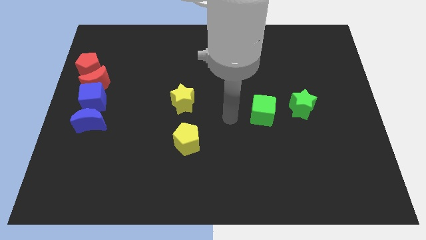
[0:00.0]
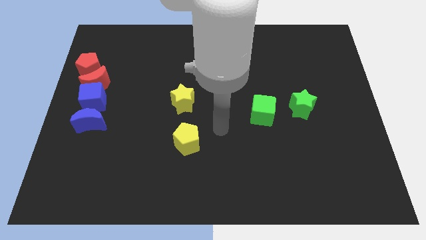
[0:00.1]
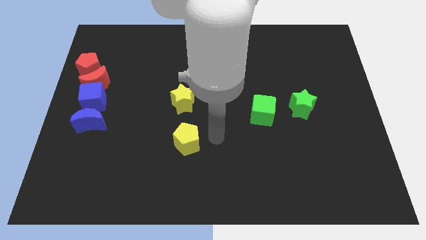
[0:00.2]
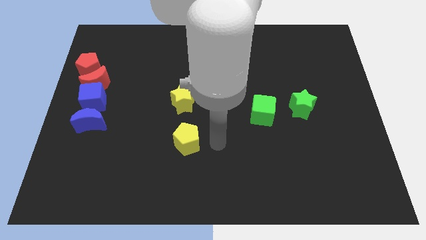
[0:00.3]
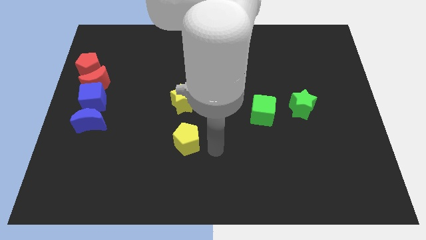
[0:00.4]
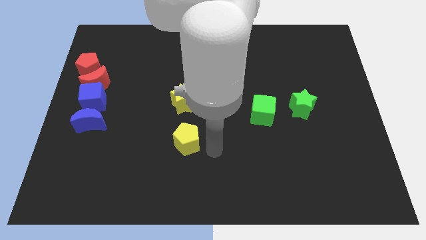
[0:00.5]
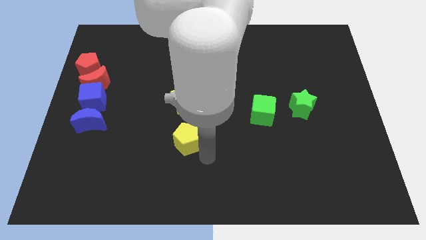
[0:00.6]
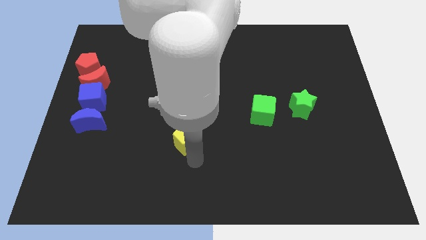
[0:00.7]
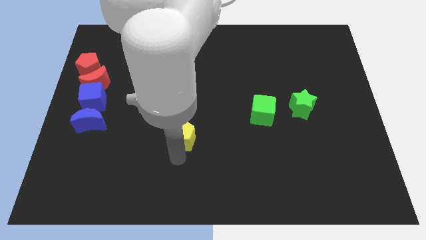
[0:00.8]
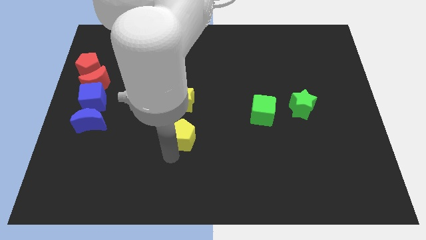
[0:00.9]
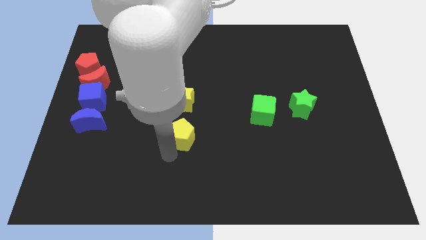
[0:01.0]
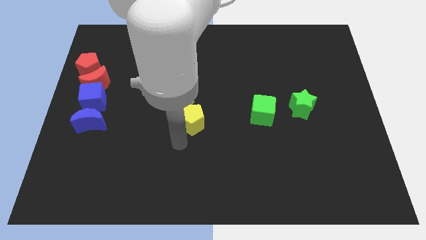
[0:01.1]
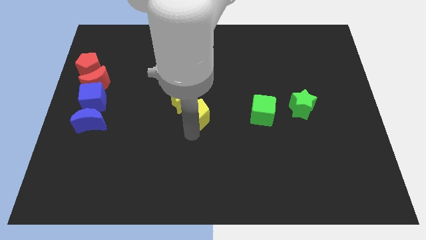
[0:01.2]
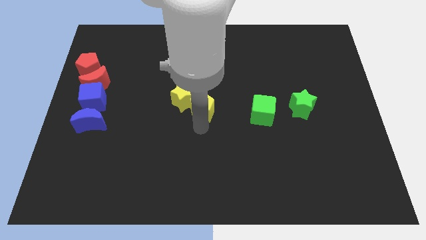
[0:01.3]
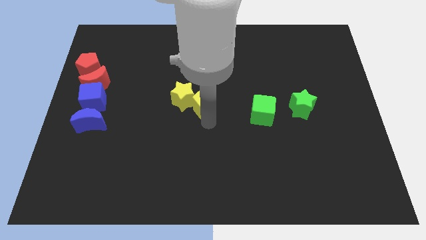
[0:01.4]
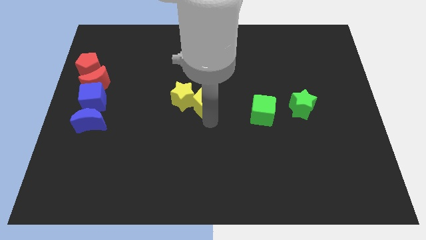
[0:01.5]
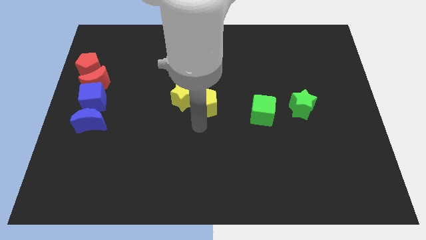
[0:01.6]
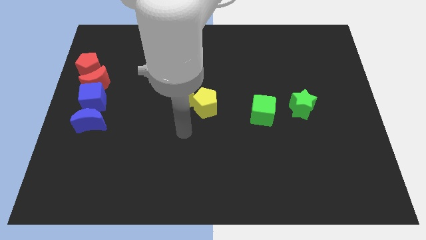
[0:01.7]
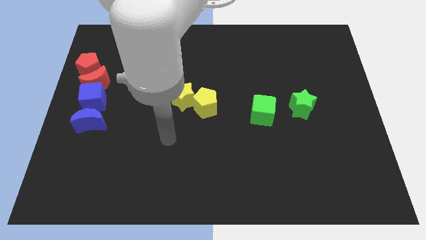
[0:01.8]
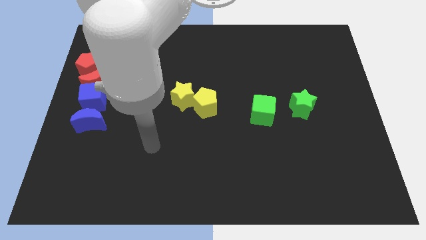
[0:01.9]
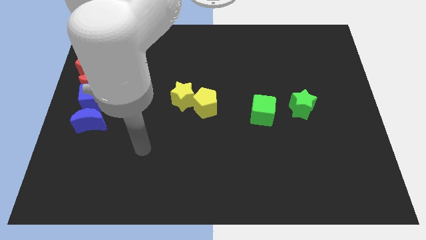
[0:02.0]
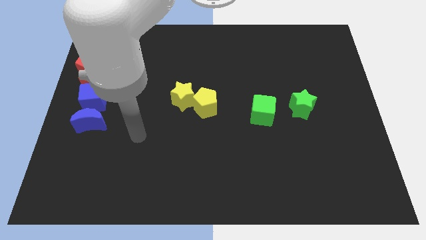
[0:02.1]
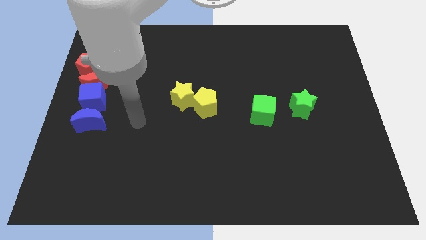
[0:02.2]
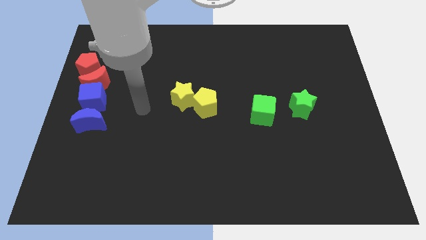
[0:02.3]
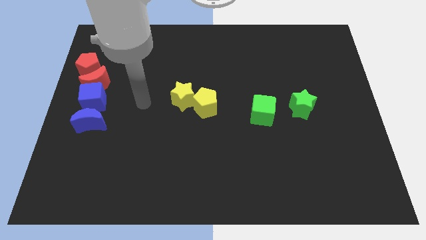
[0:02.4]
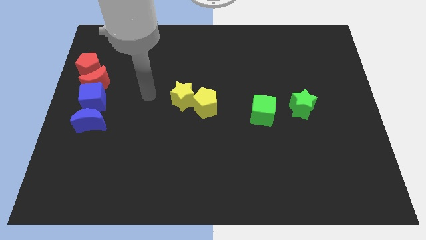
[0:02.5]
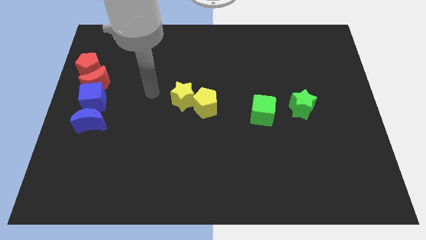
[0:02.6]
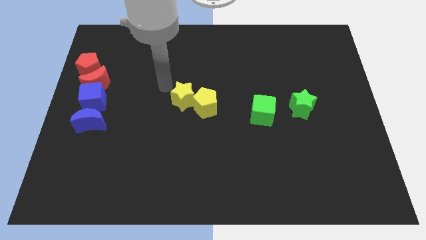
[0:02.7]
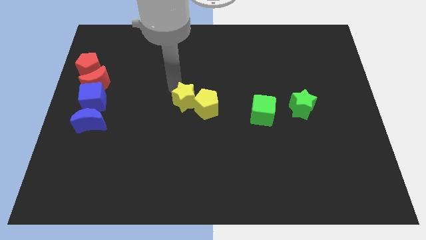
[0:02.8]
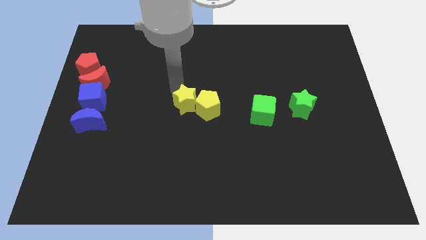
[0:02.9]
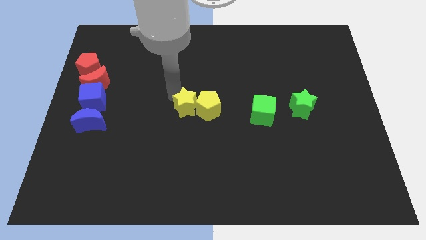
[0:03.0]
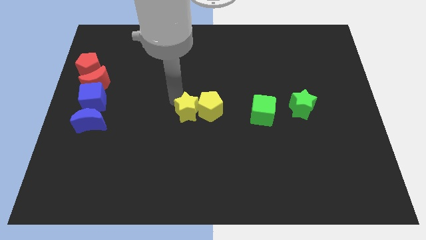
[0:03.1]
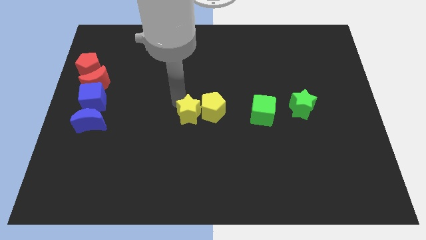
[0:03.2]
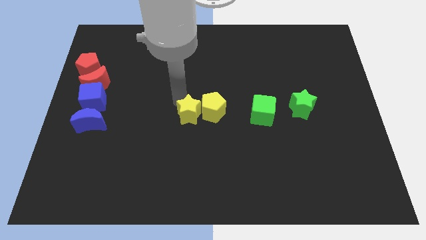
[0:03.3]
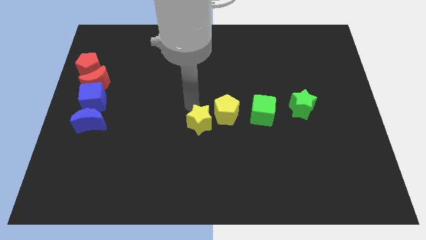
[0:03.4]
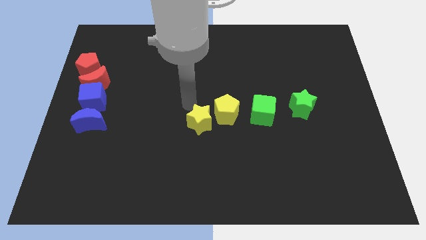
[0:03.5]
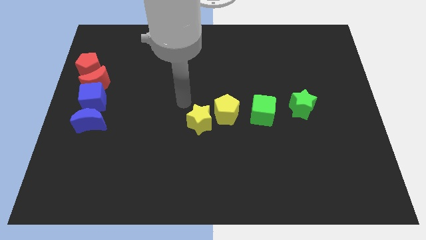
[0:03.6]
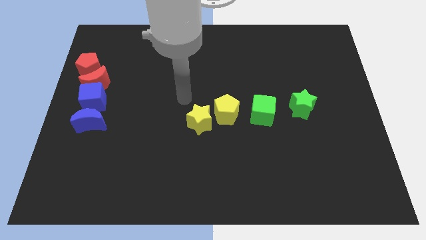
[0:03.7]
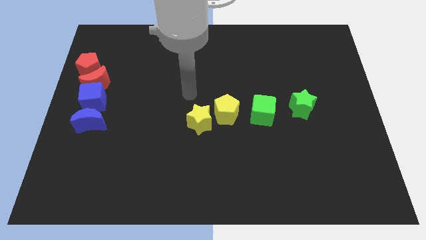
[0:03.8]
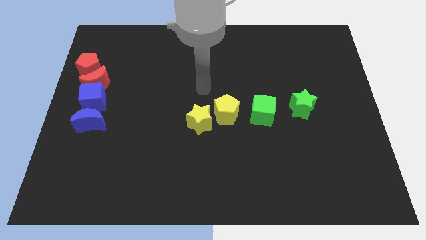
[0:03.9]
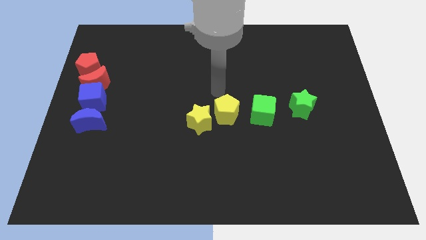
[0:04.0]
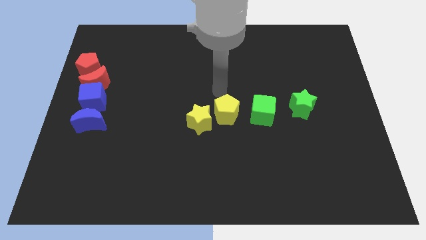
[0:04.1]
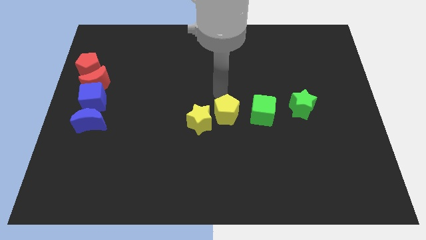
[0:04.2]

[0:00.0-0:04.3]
move the yellow blocks towards the left side of the green cube

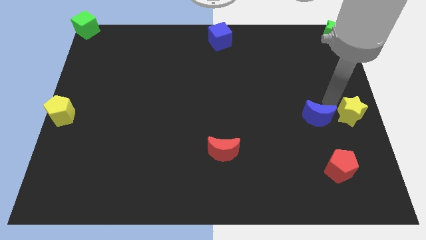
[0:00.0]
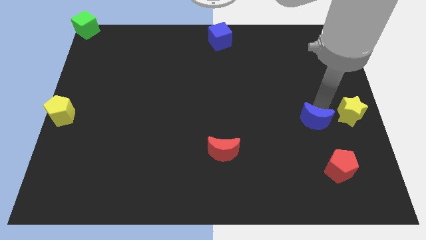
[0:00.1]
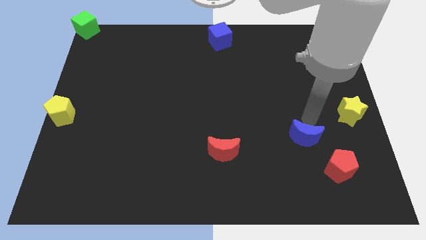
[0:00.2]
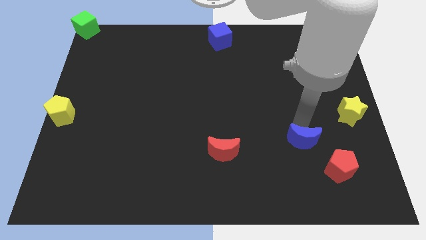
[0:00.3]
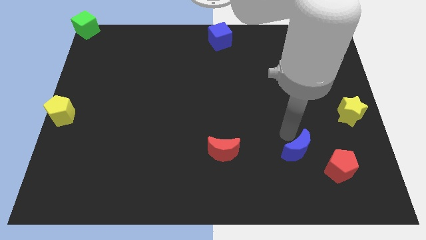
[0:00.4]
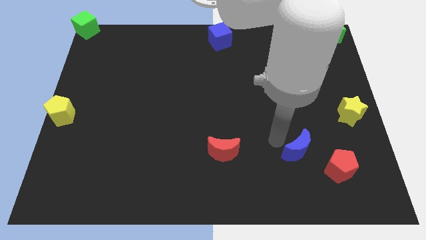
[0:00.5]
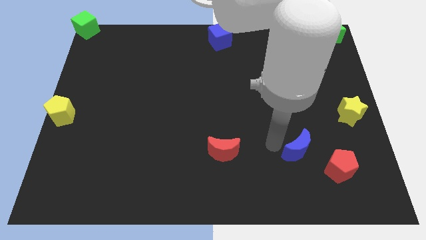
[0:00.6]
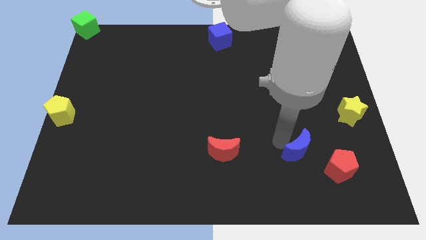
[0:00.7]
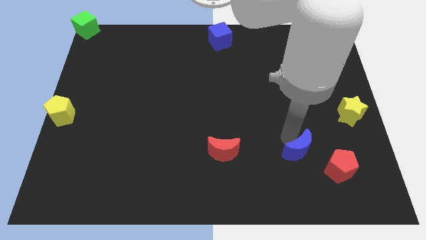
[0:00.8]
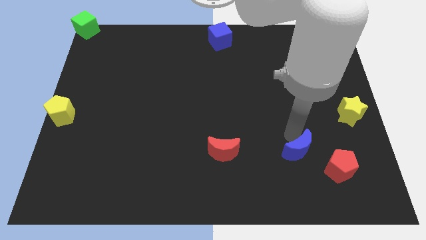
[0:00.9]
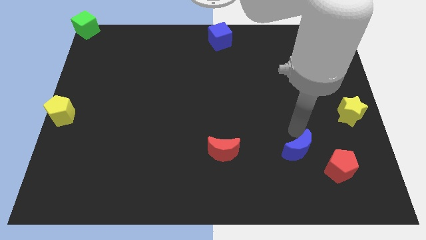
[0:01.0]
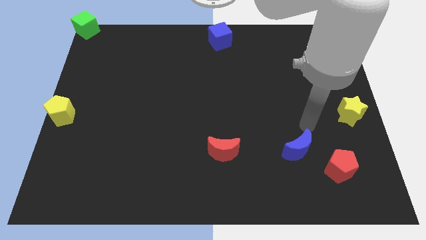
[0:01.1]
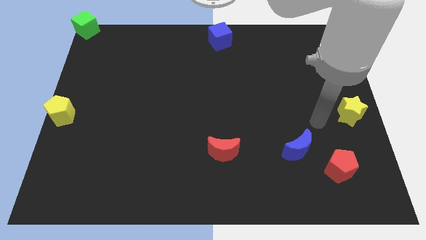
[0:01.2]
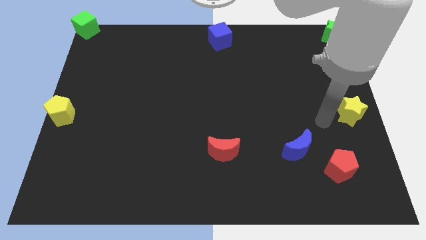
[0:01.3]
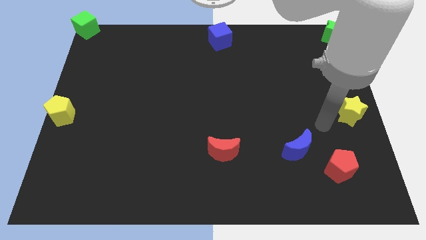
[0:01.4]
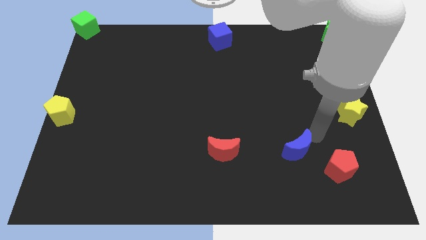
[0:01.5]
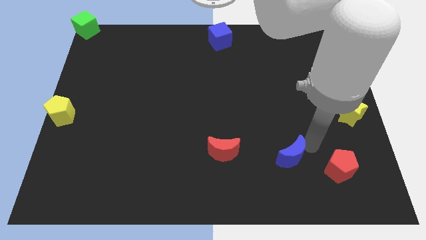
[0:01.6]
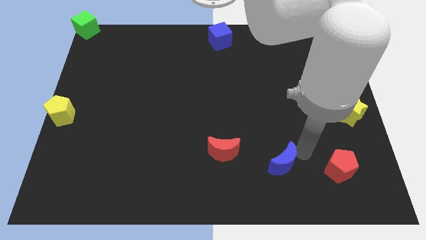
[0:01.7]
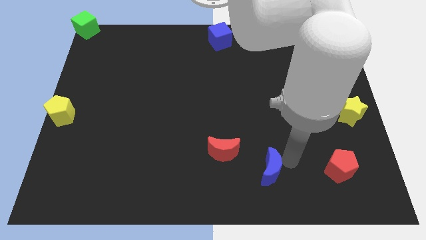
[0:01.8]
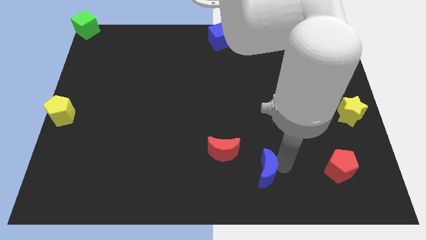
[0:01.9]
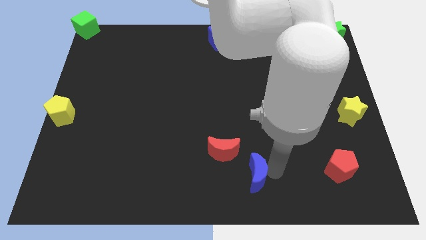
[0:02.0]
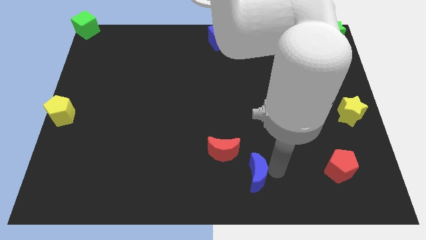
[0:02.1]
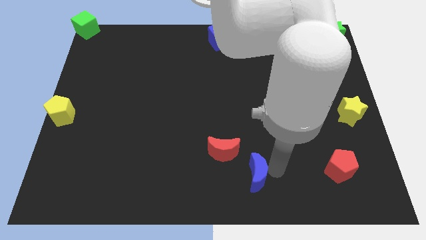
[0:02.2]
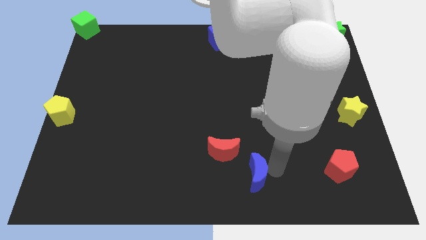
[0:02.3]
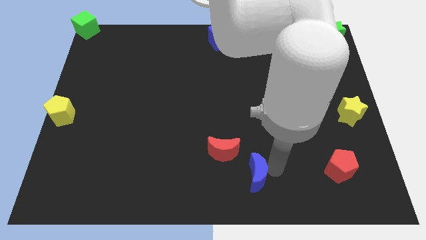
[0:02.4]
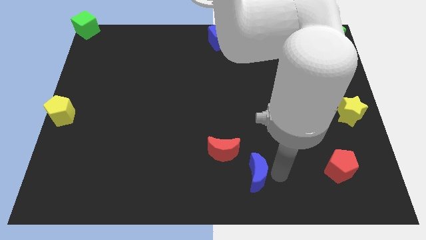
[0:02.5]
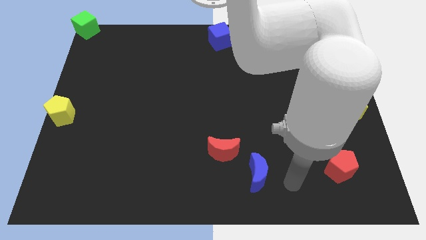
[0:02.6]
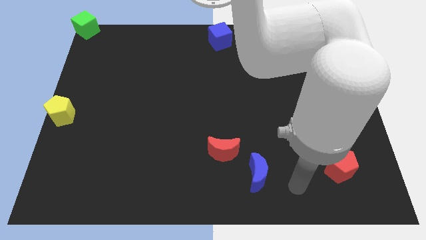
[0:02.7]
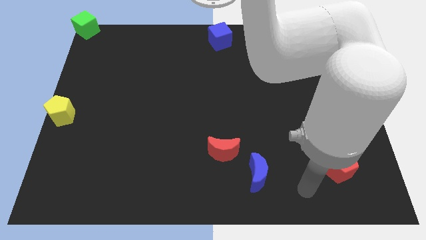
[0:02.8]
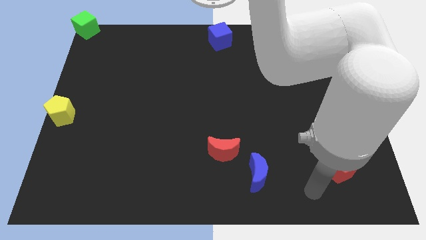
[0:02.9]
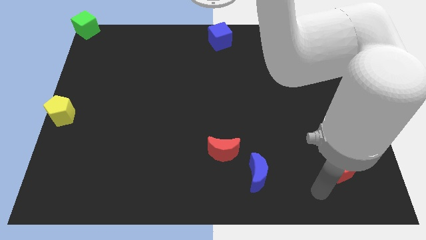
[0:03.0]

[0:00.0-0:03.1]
move the blue moon to the bottom center

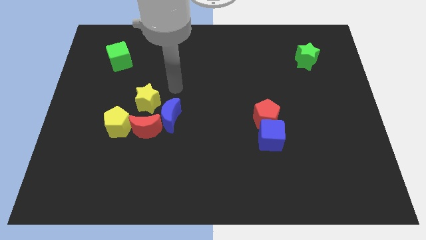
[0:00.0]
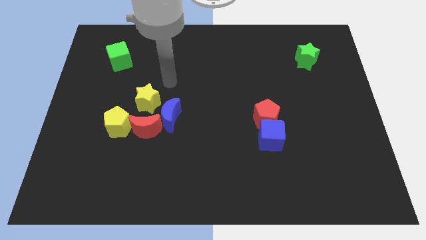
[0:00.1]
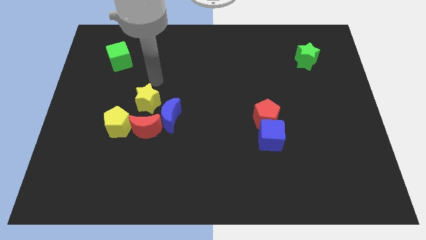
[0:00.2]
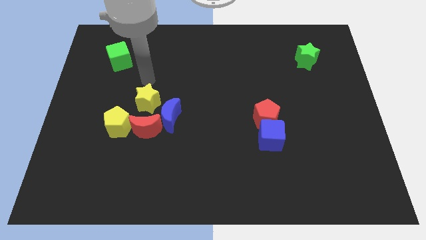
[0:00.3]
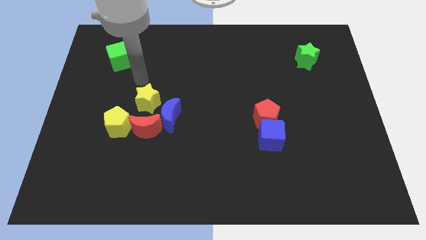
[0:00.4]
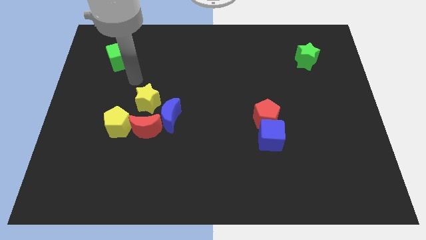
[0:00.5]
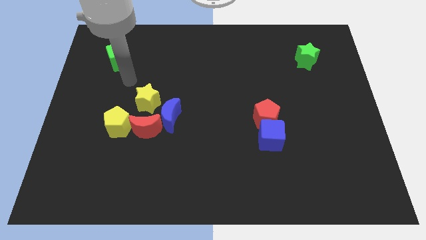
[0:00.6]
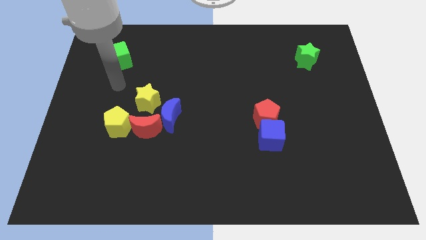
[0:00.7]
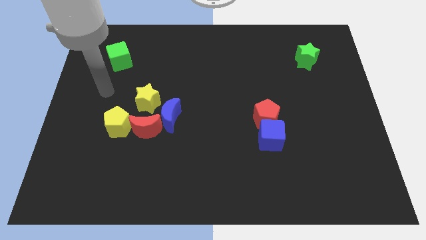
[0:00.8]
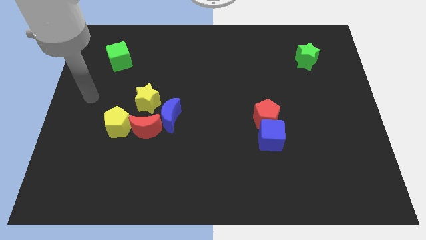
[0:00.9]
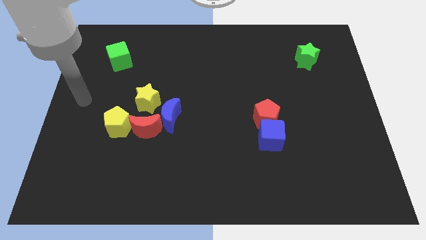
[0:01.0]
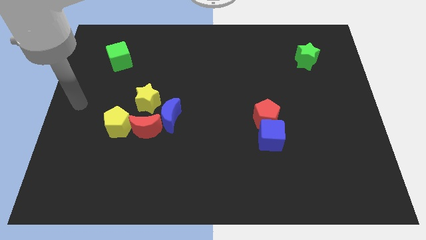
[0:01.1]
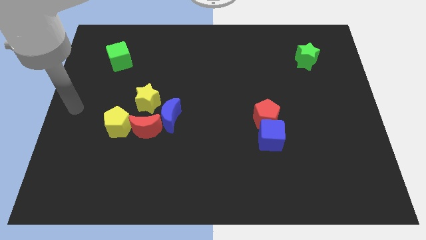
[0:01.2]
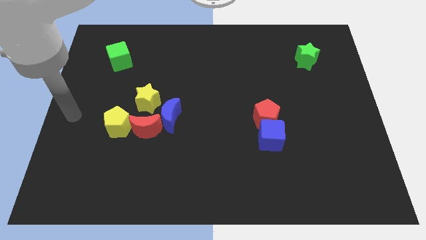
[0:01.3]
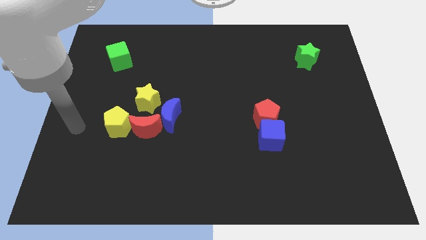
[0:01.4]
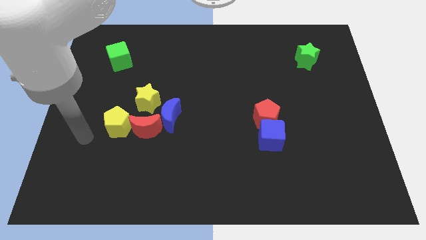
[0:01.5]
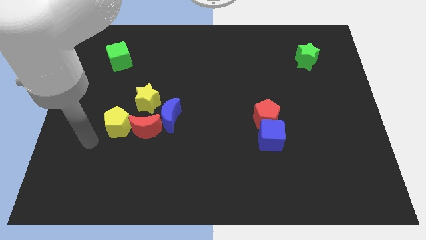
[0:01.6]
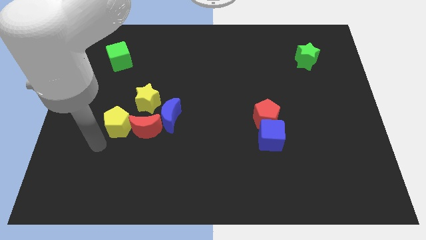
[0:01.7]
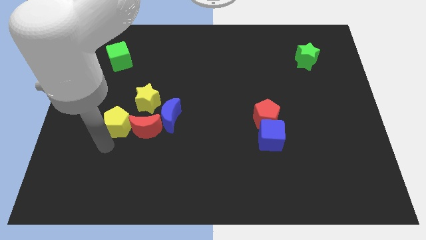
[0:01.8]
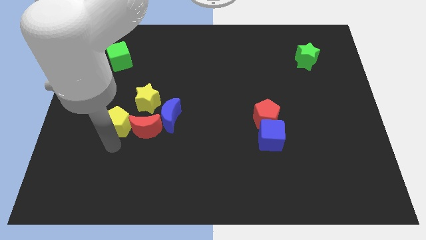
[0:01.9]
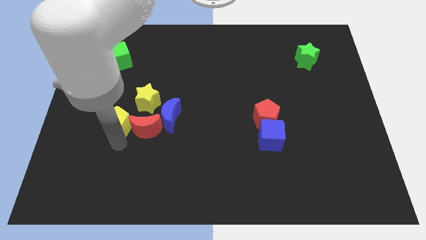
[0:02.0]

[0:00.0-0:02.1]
move the hand towards the yellow pentagon
